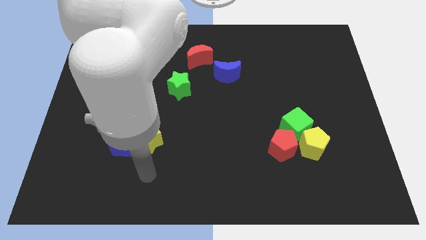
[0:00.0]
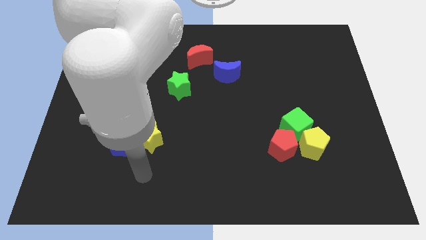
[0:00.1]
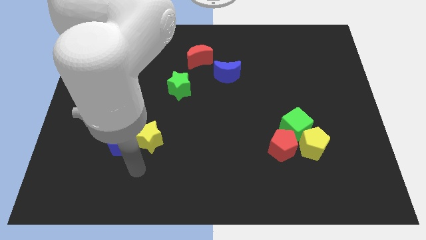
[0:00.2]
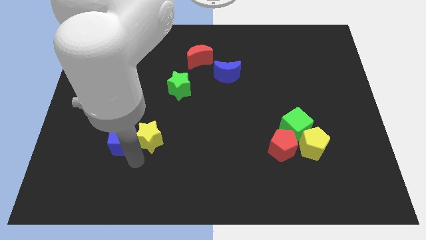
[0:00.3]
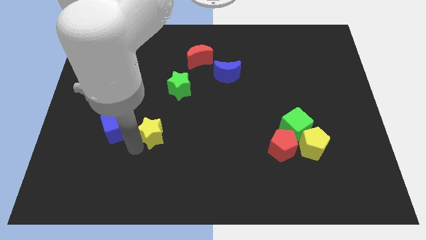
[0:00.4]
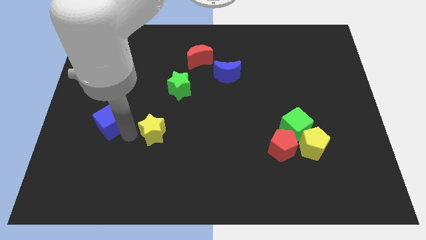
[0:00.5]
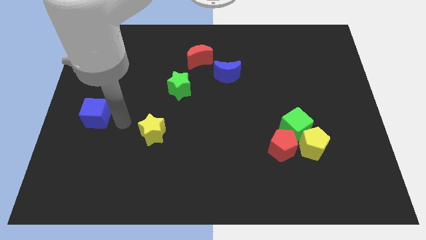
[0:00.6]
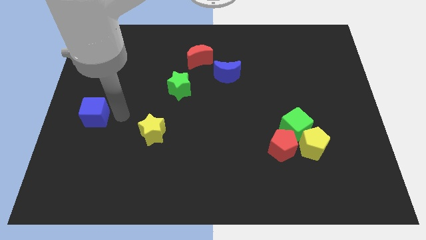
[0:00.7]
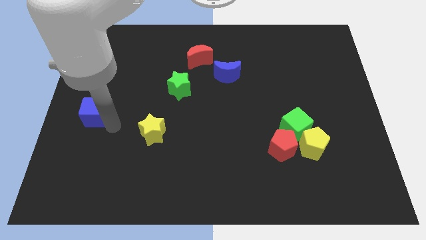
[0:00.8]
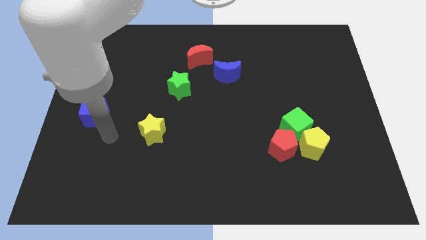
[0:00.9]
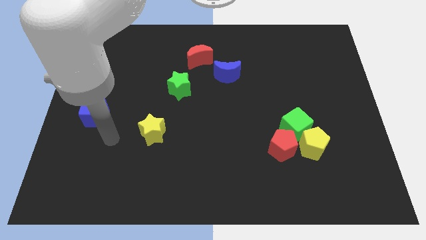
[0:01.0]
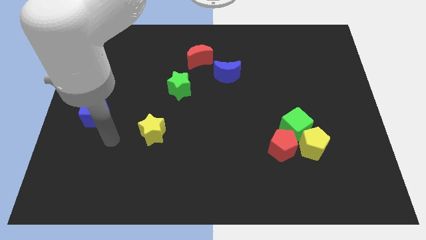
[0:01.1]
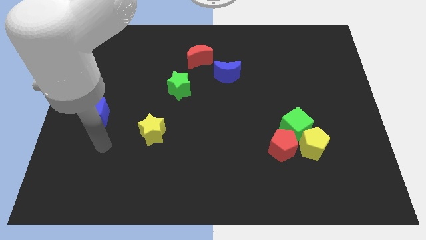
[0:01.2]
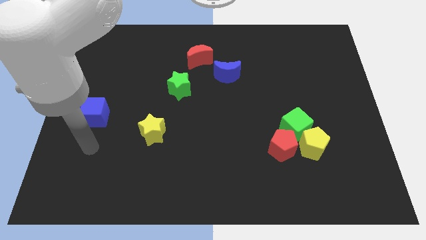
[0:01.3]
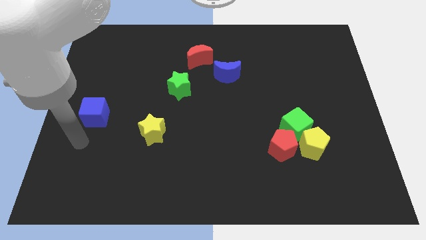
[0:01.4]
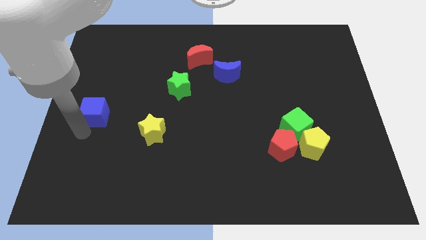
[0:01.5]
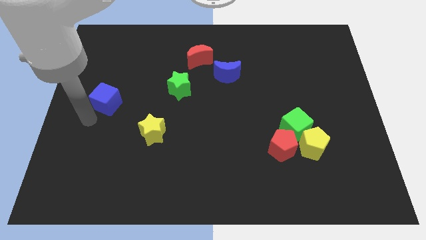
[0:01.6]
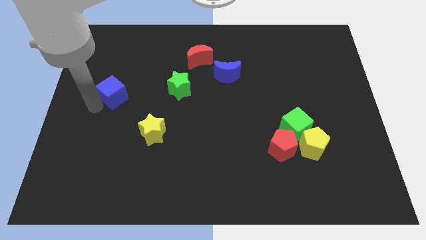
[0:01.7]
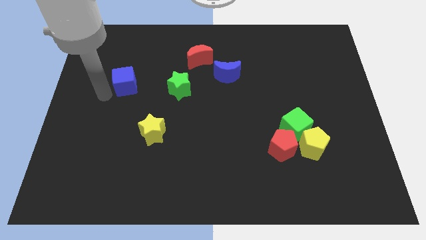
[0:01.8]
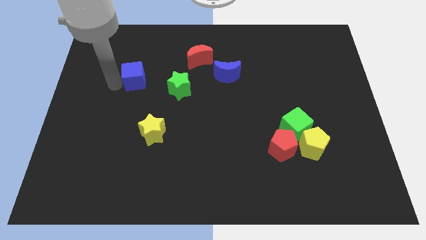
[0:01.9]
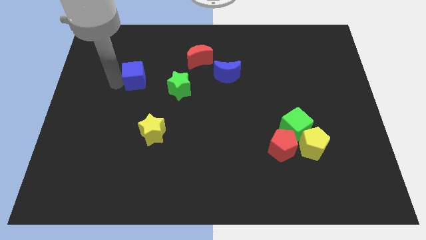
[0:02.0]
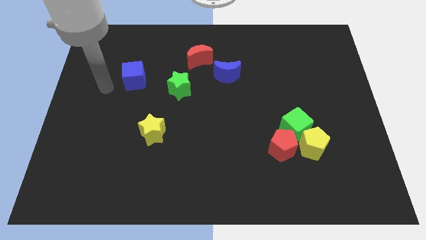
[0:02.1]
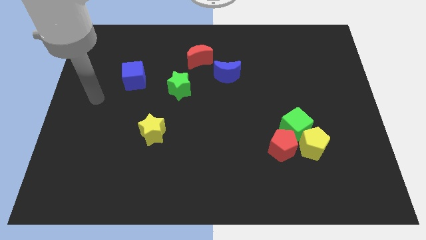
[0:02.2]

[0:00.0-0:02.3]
move the blue cube to the top left of the green star

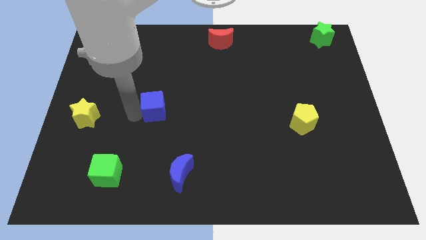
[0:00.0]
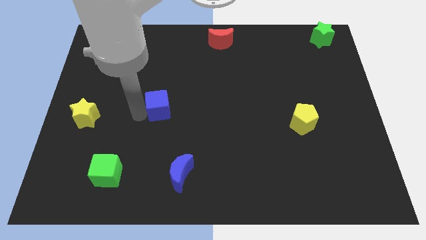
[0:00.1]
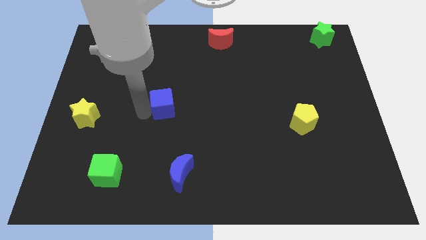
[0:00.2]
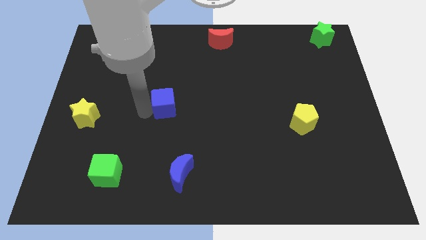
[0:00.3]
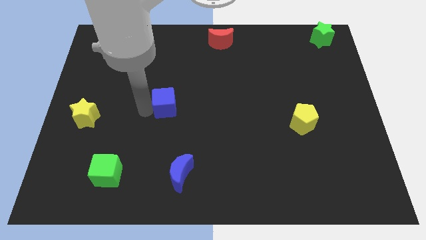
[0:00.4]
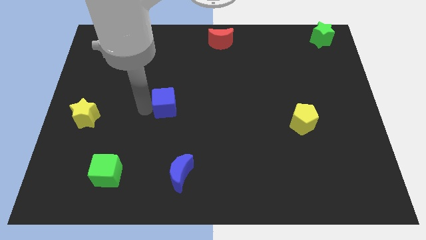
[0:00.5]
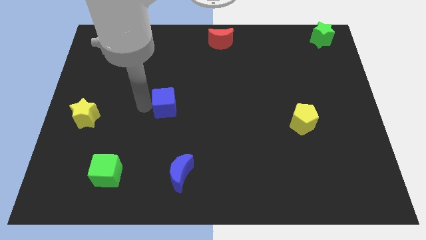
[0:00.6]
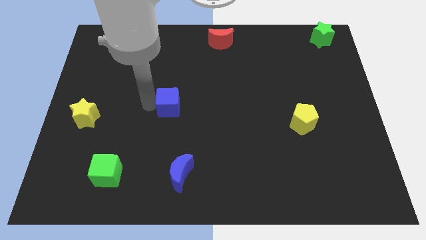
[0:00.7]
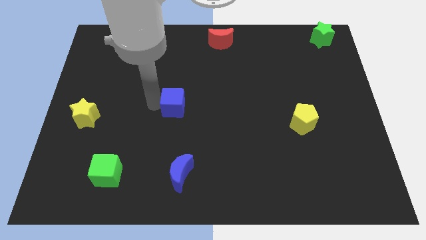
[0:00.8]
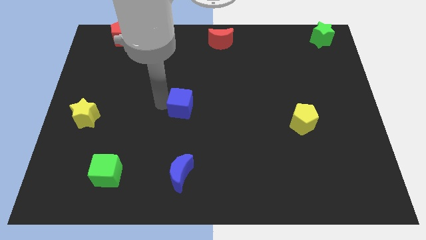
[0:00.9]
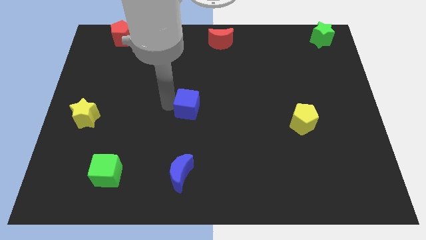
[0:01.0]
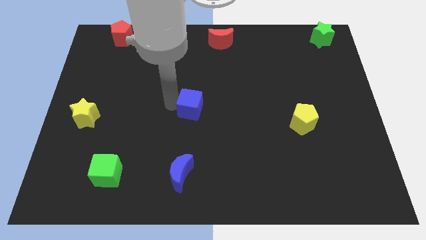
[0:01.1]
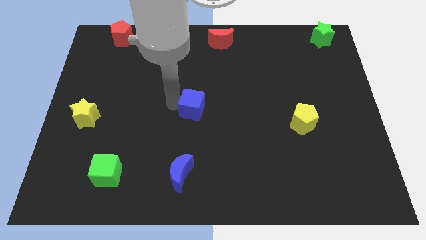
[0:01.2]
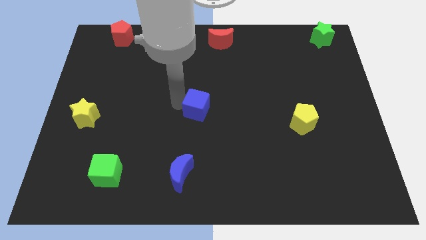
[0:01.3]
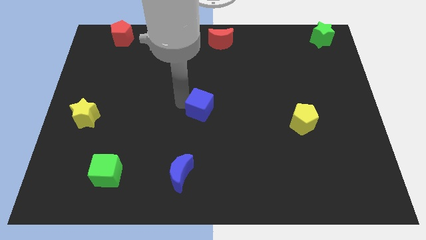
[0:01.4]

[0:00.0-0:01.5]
move the blue cube slightly to the right

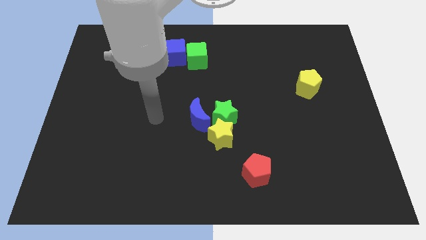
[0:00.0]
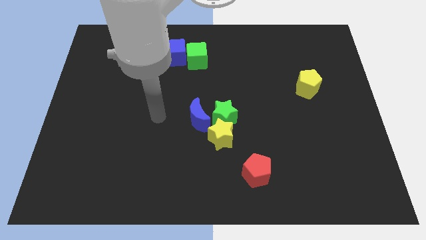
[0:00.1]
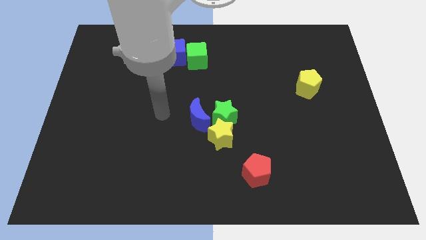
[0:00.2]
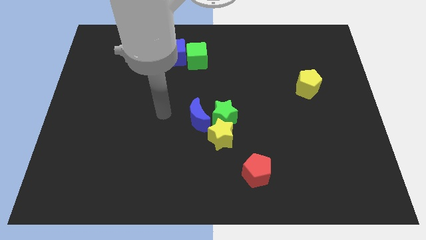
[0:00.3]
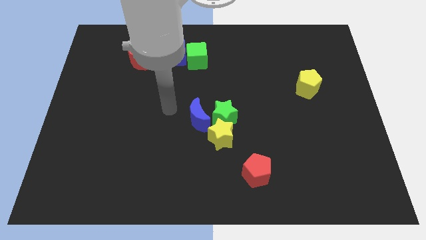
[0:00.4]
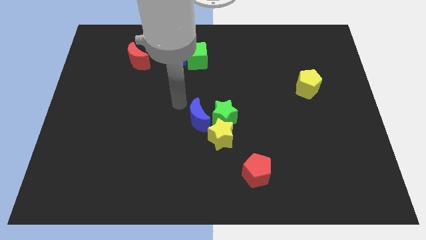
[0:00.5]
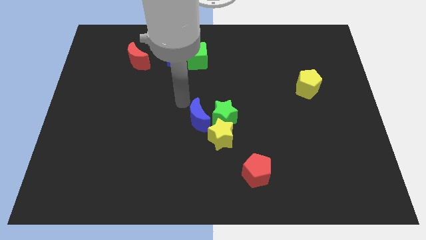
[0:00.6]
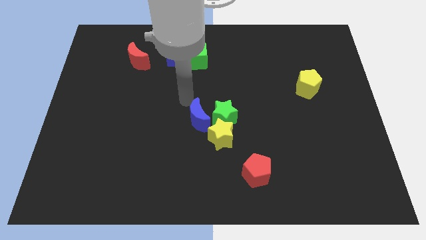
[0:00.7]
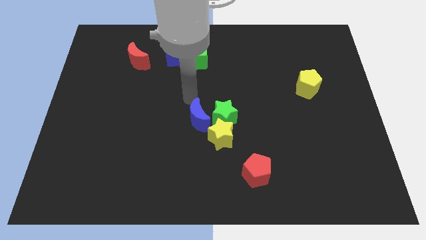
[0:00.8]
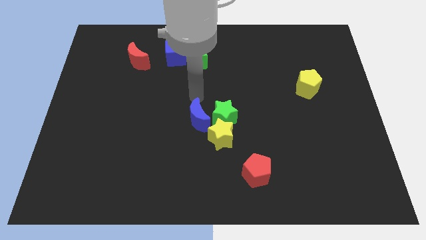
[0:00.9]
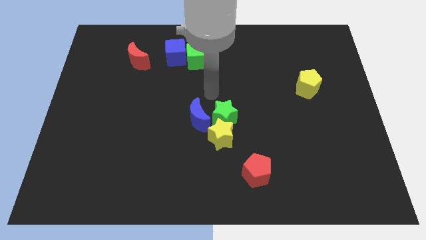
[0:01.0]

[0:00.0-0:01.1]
point your arm above the blue crescent and green star

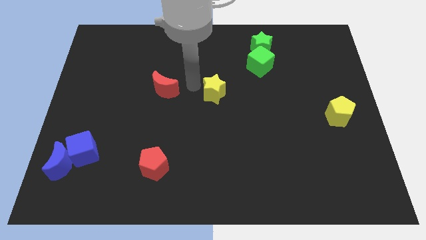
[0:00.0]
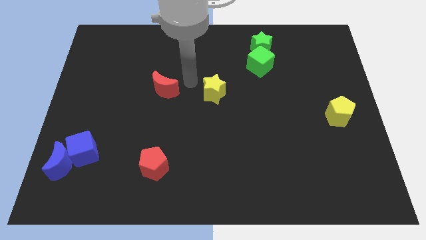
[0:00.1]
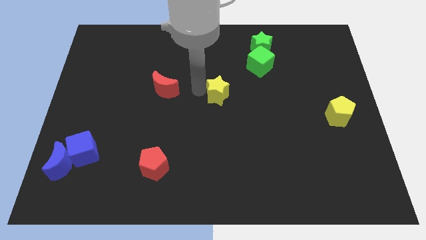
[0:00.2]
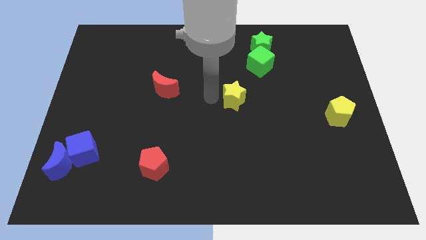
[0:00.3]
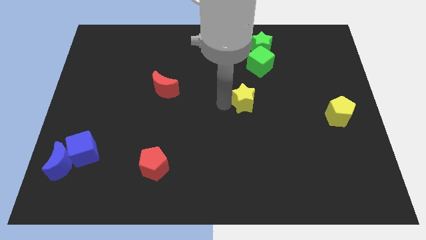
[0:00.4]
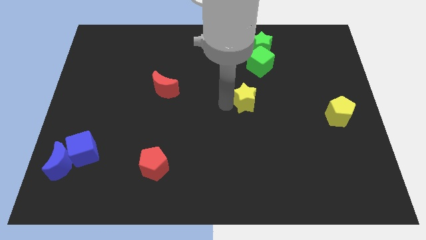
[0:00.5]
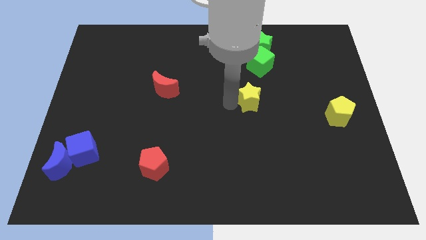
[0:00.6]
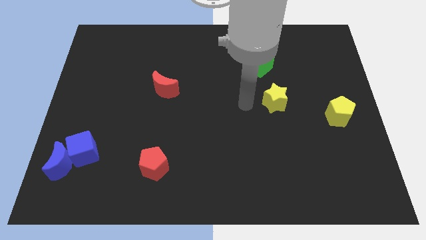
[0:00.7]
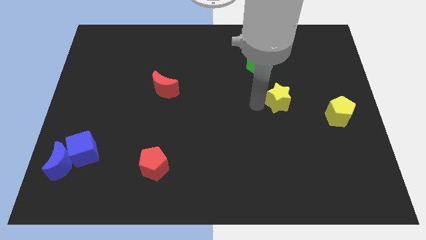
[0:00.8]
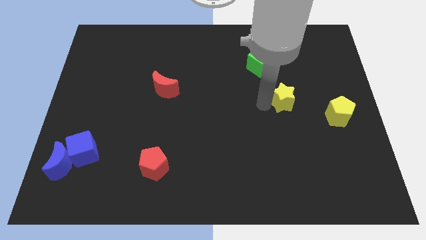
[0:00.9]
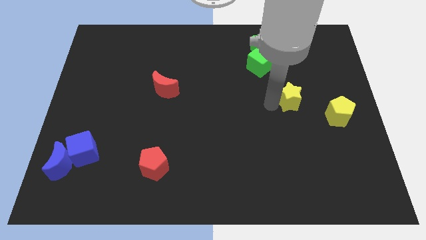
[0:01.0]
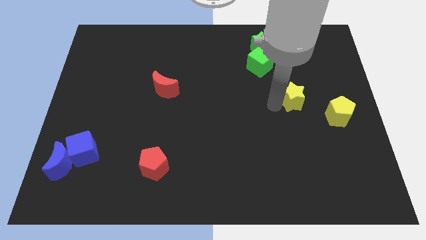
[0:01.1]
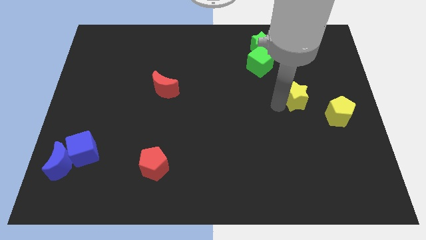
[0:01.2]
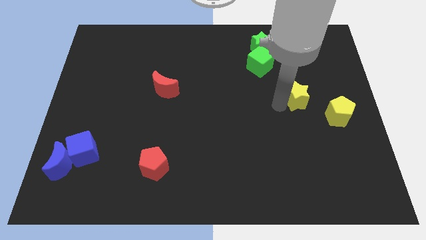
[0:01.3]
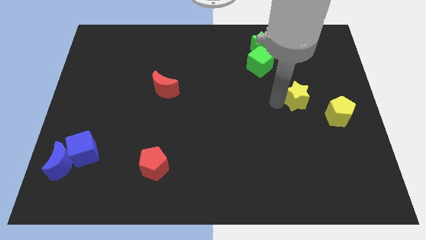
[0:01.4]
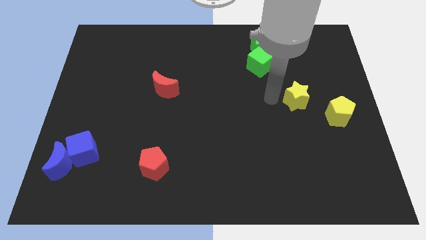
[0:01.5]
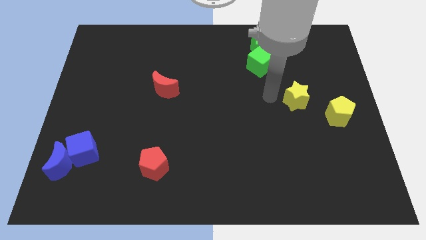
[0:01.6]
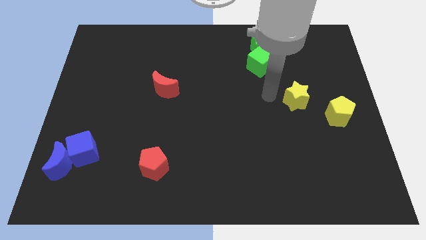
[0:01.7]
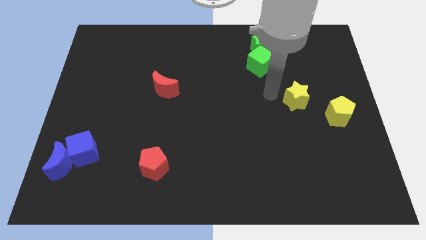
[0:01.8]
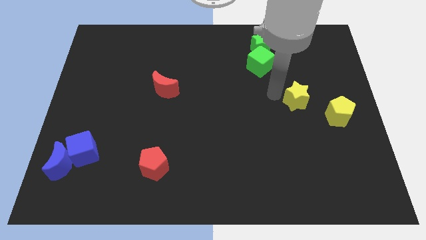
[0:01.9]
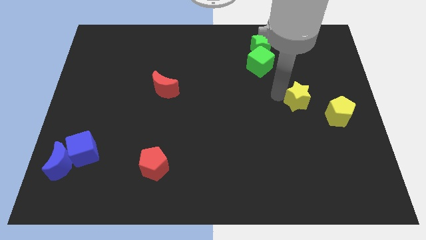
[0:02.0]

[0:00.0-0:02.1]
place yellow star diagonal to yellow pentagon

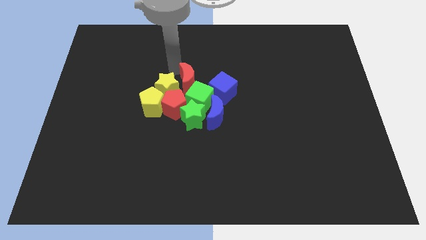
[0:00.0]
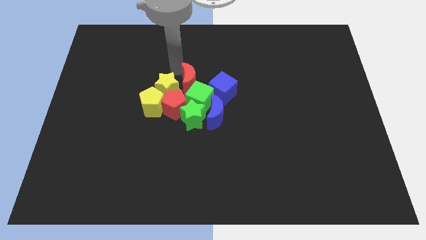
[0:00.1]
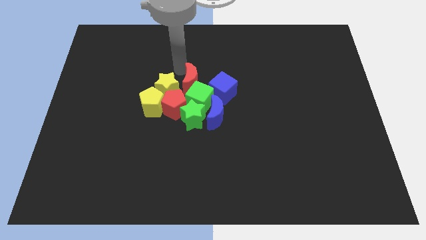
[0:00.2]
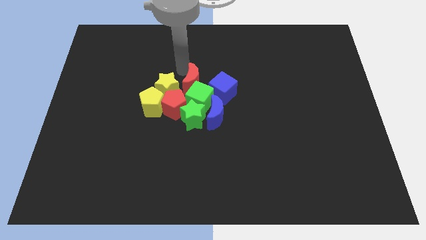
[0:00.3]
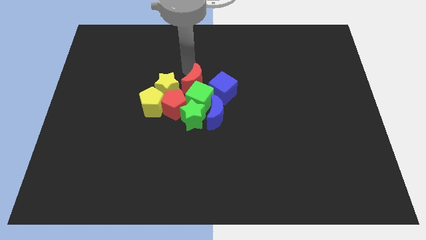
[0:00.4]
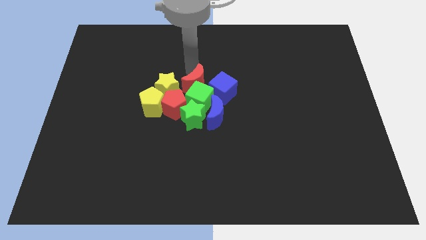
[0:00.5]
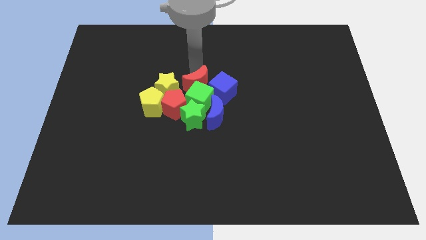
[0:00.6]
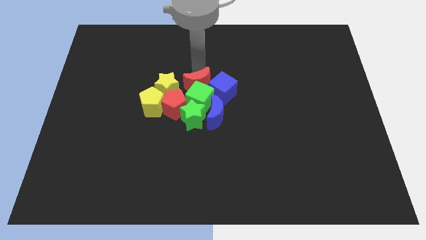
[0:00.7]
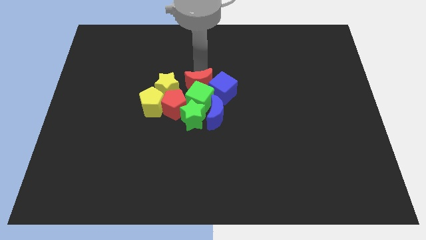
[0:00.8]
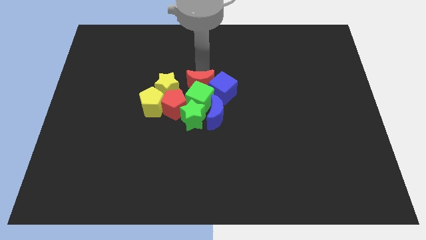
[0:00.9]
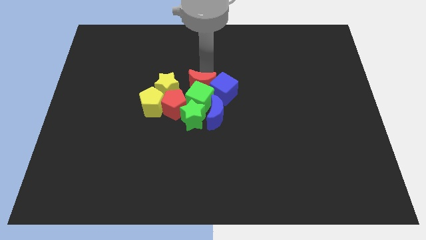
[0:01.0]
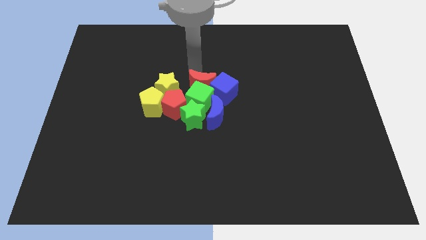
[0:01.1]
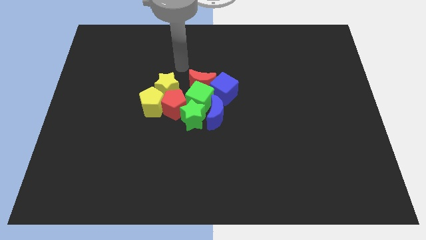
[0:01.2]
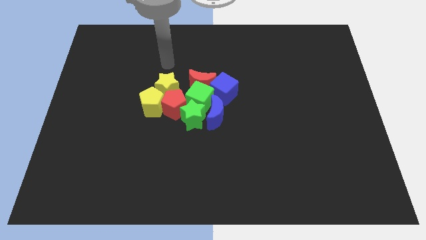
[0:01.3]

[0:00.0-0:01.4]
place the red crescent above the green cube

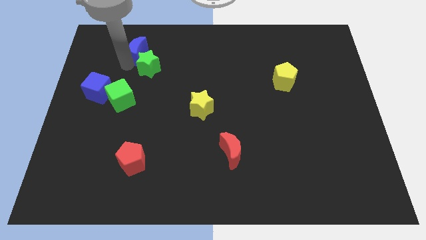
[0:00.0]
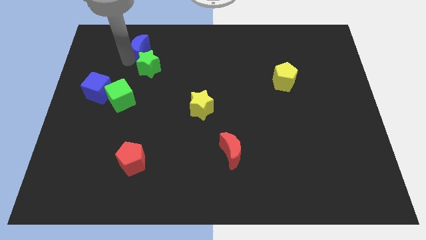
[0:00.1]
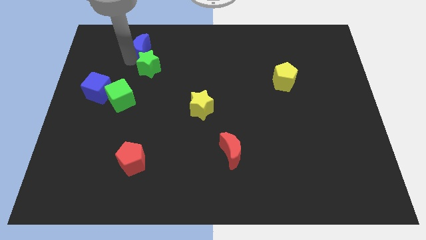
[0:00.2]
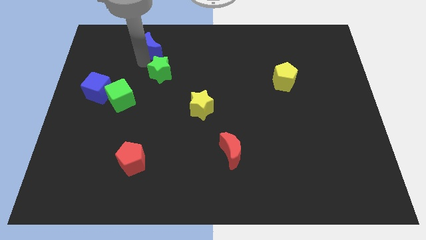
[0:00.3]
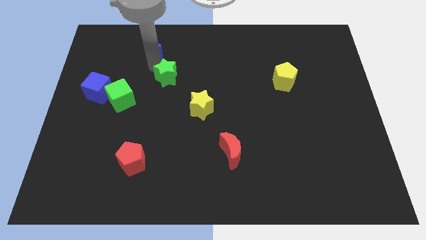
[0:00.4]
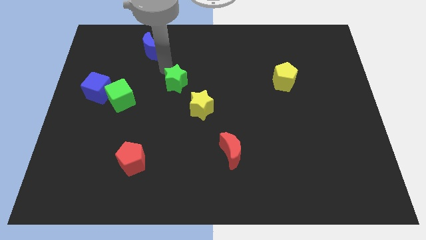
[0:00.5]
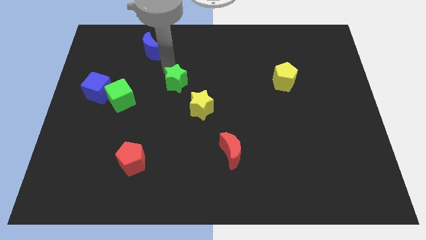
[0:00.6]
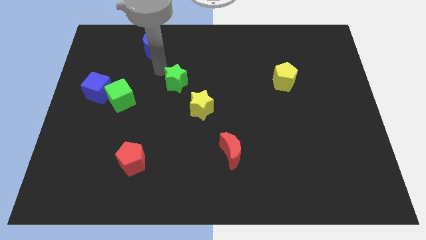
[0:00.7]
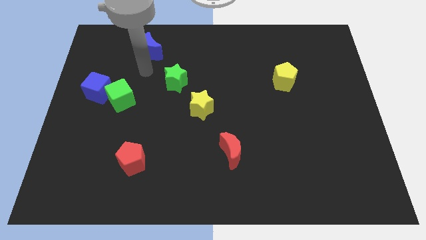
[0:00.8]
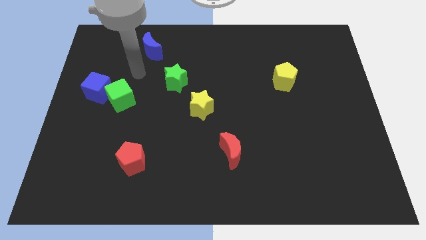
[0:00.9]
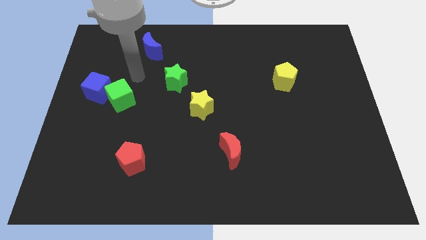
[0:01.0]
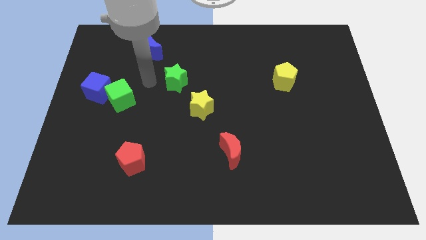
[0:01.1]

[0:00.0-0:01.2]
push green star to the top left of yellow star
